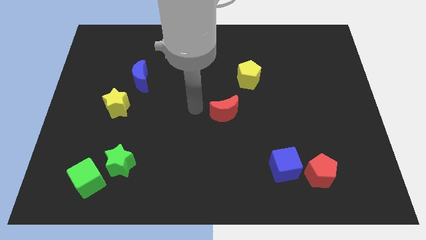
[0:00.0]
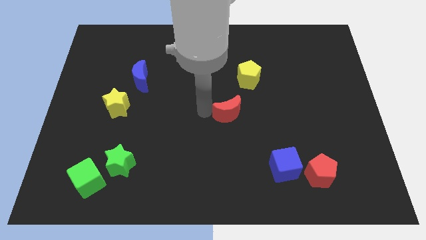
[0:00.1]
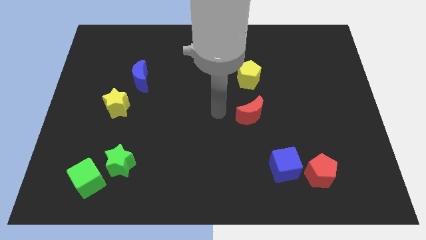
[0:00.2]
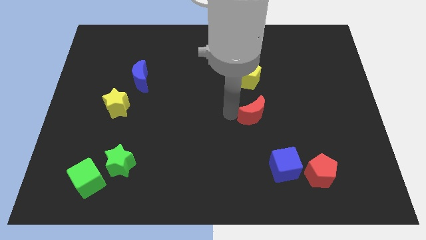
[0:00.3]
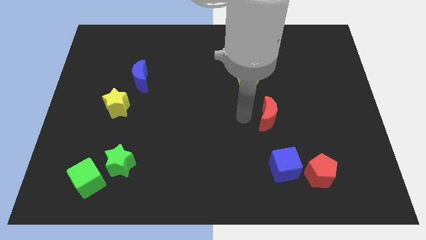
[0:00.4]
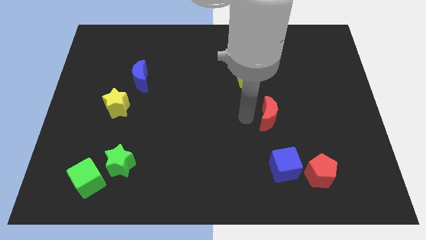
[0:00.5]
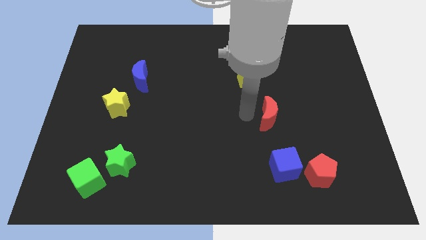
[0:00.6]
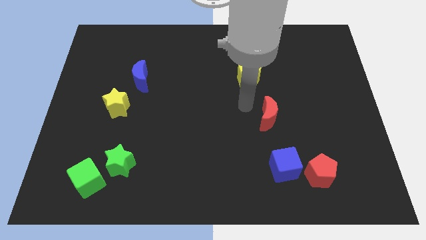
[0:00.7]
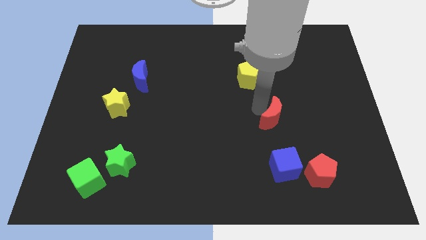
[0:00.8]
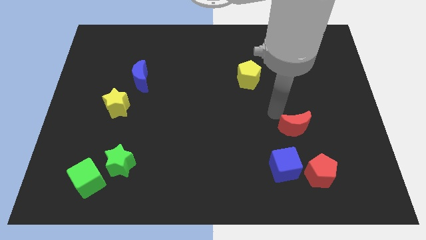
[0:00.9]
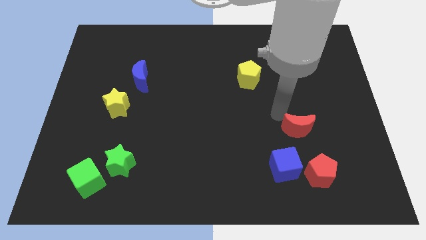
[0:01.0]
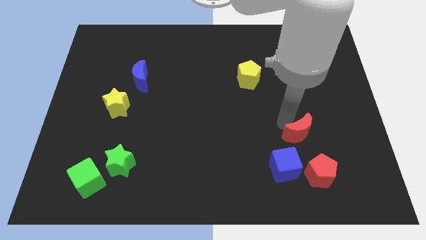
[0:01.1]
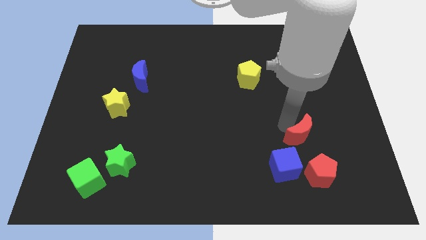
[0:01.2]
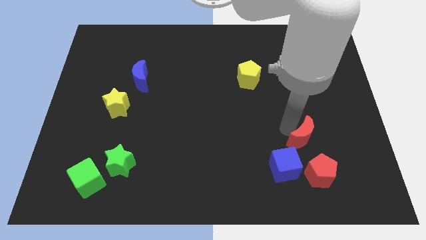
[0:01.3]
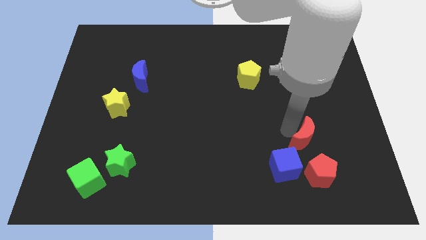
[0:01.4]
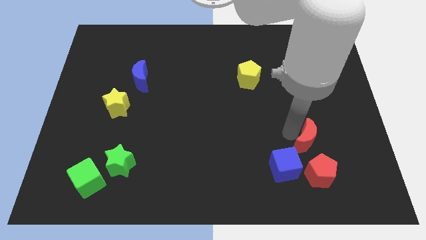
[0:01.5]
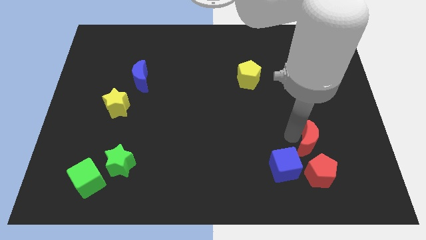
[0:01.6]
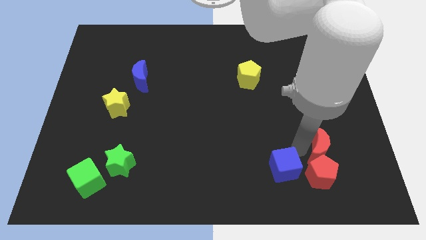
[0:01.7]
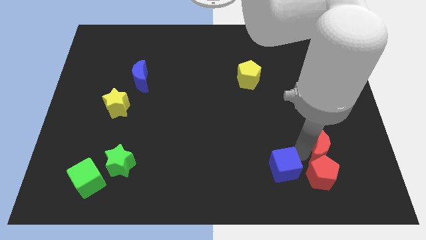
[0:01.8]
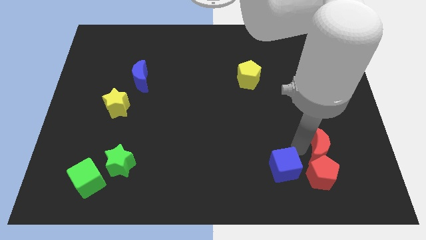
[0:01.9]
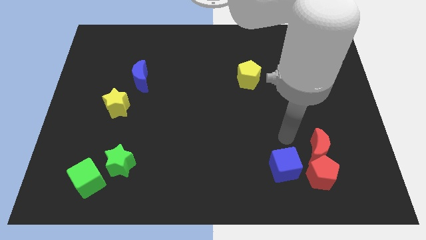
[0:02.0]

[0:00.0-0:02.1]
place the red moon into red pentagon on top

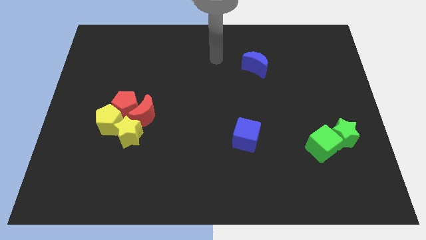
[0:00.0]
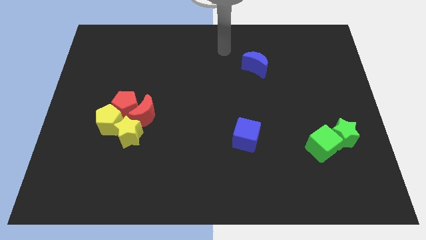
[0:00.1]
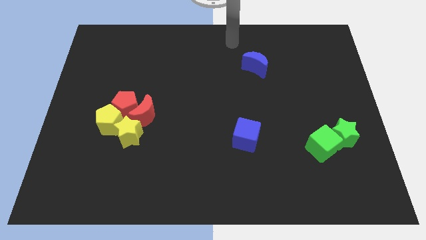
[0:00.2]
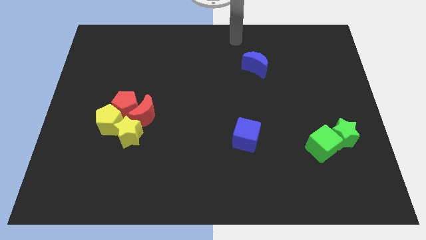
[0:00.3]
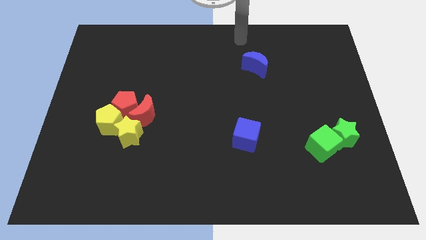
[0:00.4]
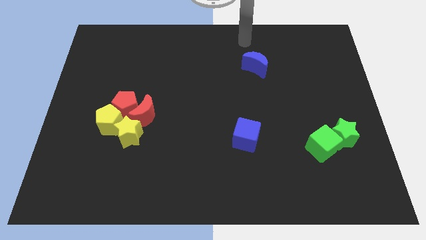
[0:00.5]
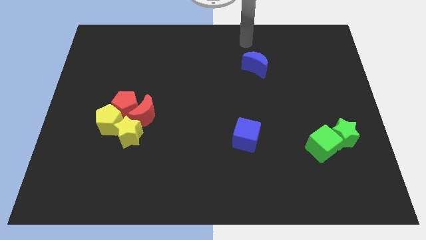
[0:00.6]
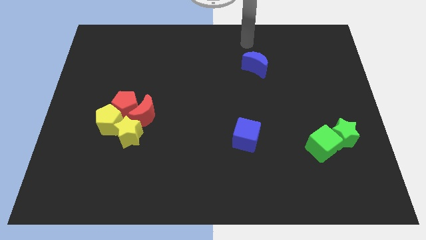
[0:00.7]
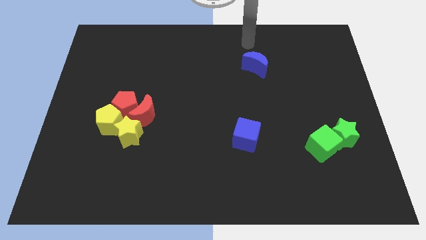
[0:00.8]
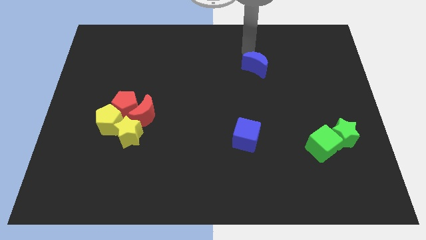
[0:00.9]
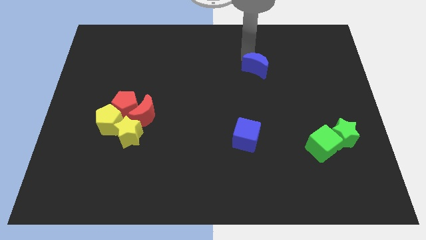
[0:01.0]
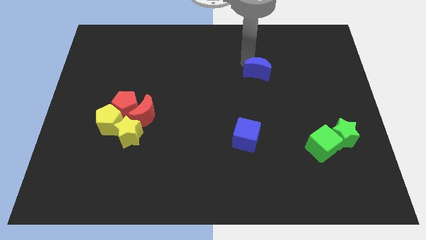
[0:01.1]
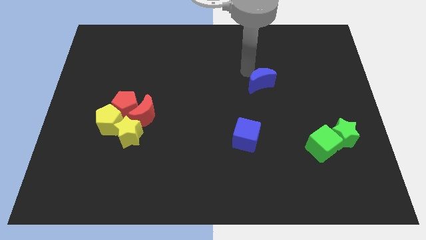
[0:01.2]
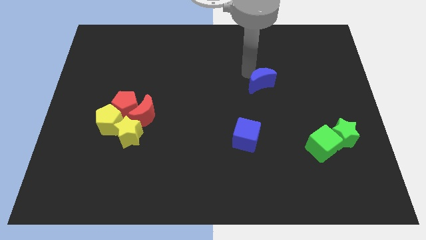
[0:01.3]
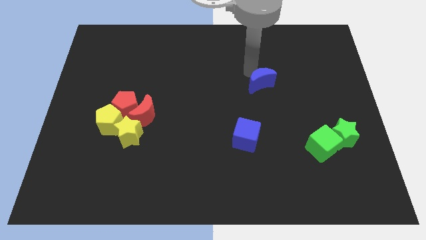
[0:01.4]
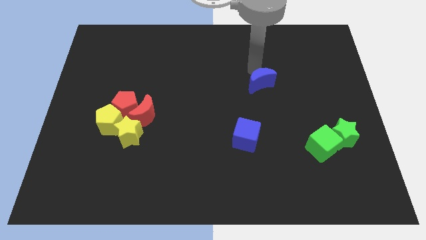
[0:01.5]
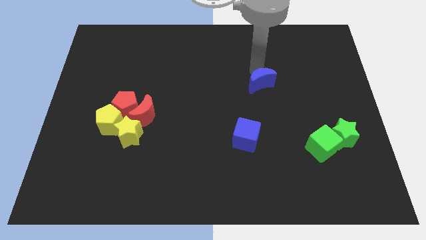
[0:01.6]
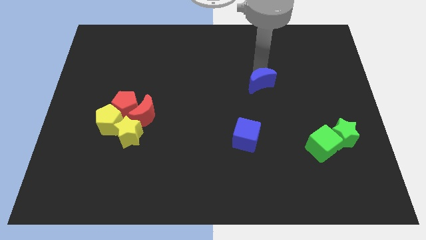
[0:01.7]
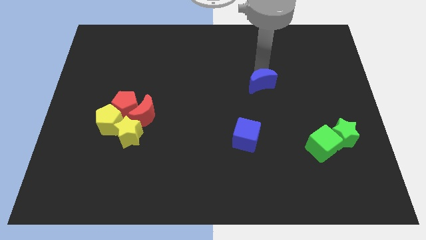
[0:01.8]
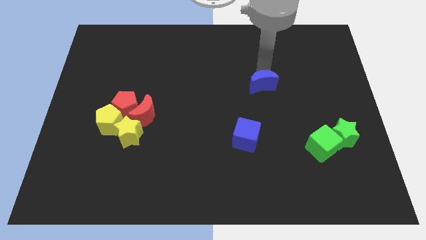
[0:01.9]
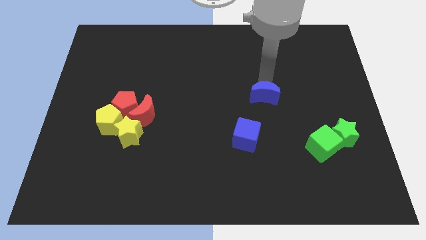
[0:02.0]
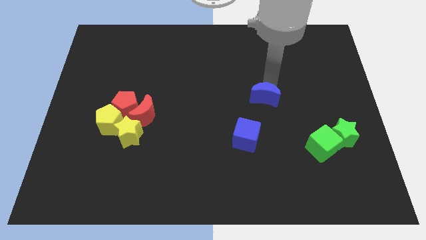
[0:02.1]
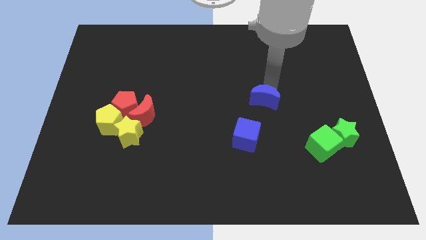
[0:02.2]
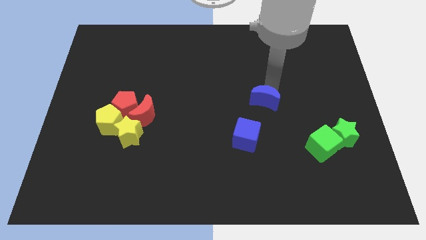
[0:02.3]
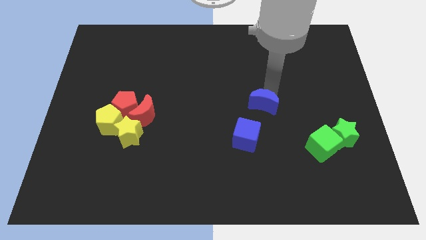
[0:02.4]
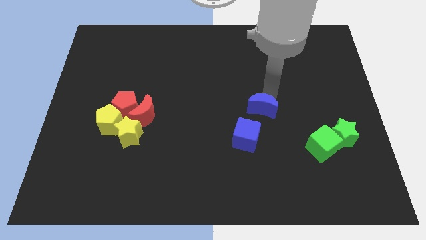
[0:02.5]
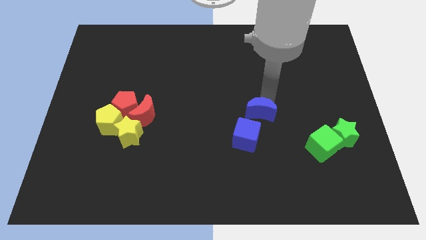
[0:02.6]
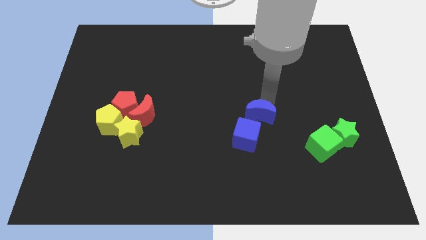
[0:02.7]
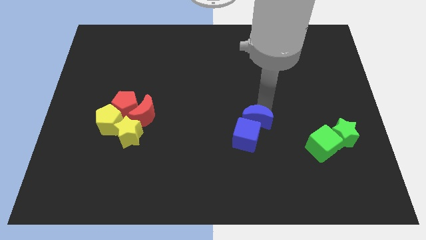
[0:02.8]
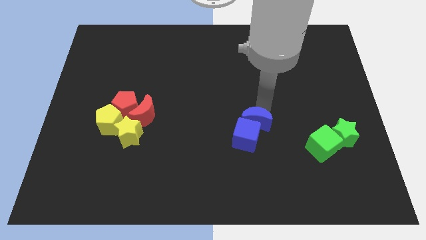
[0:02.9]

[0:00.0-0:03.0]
place the blue moon above the blue cube

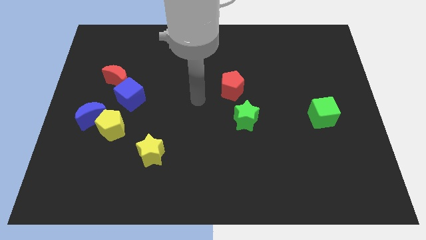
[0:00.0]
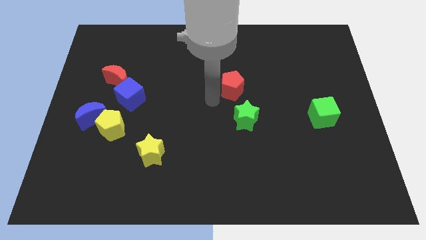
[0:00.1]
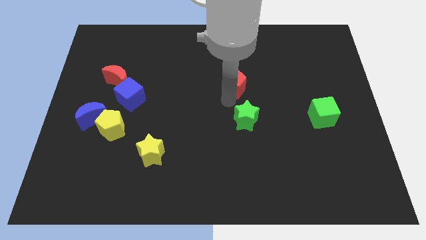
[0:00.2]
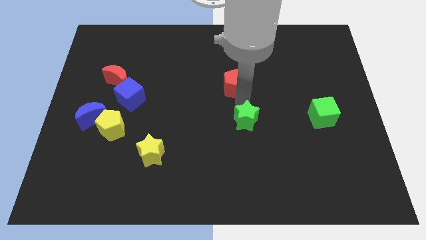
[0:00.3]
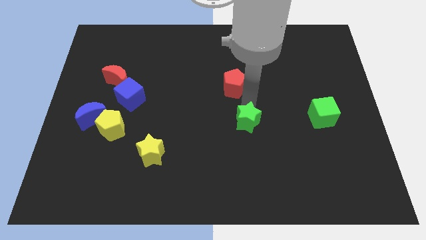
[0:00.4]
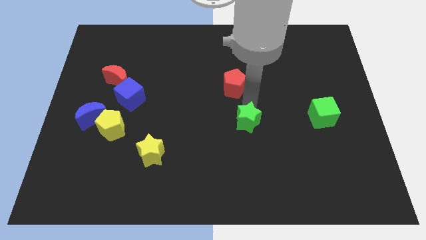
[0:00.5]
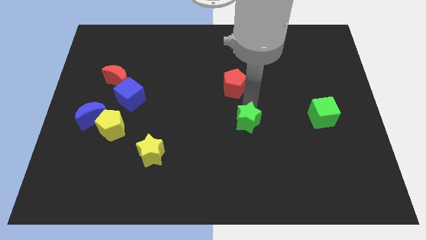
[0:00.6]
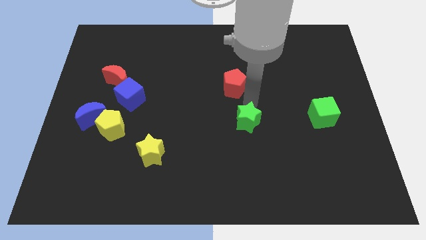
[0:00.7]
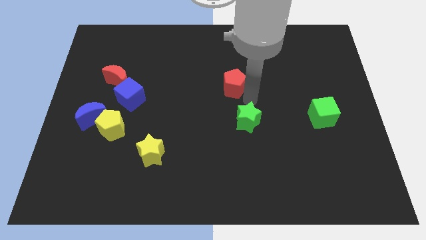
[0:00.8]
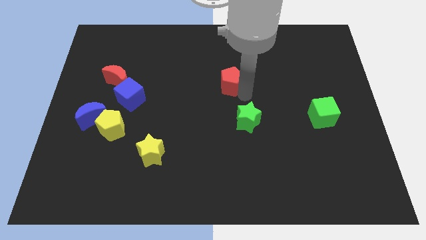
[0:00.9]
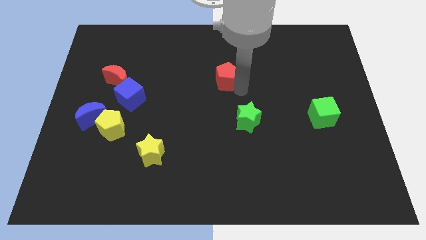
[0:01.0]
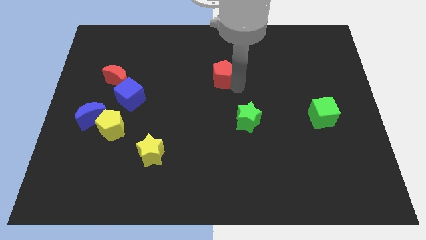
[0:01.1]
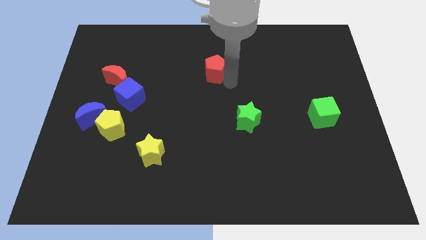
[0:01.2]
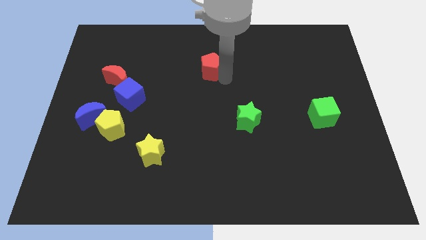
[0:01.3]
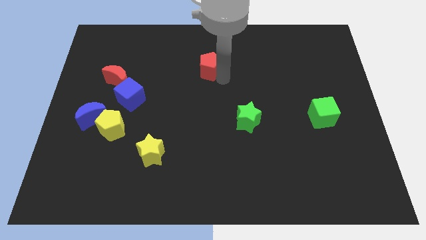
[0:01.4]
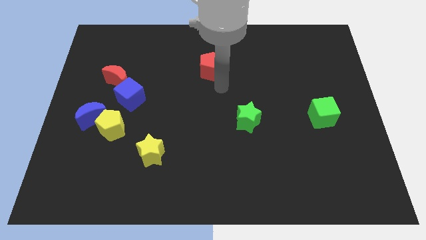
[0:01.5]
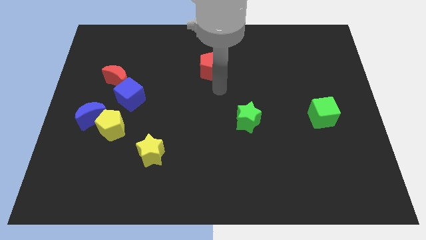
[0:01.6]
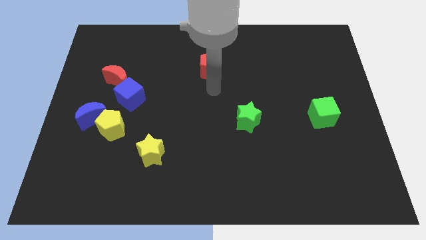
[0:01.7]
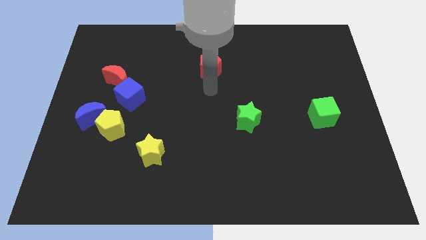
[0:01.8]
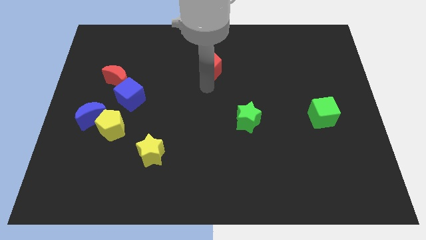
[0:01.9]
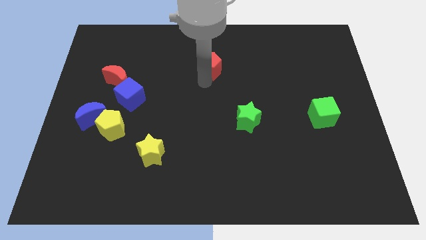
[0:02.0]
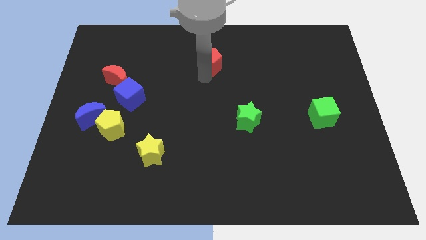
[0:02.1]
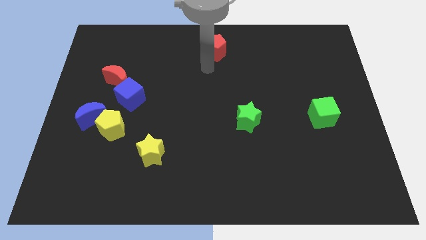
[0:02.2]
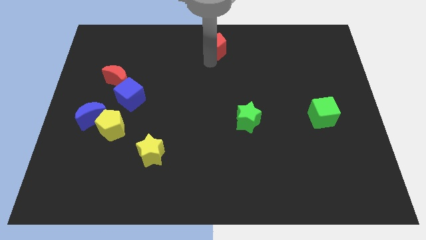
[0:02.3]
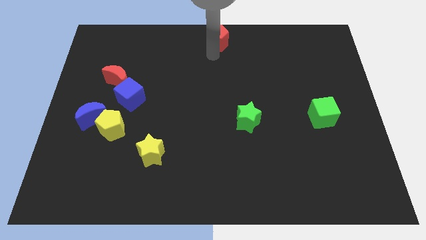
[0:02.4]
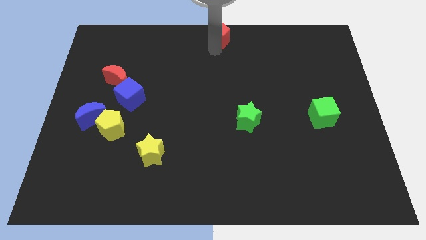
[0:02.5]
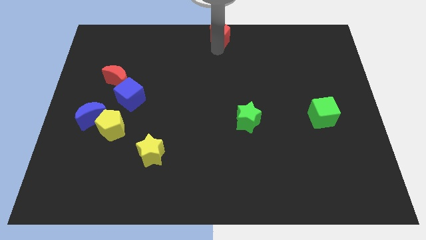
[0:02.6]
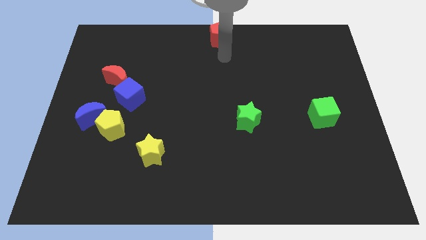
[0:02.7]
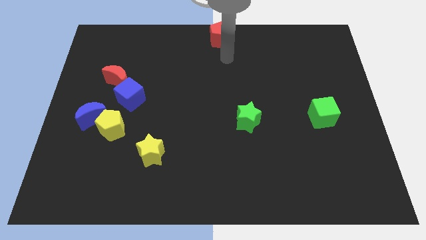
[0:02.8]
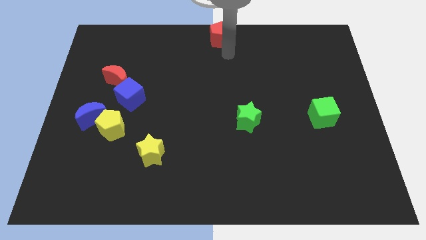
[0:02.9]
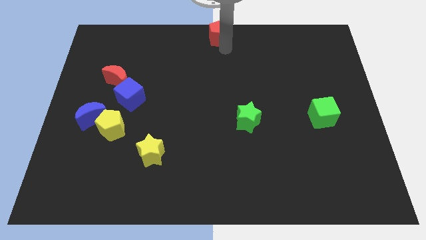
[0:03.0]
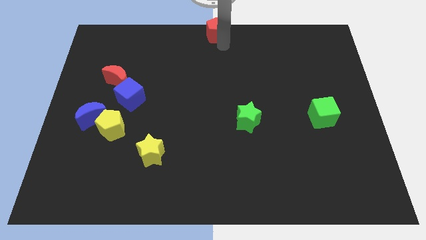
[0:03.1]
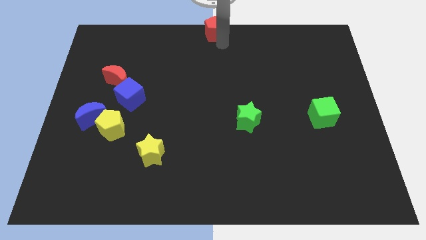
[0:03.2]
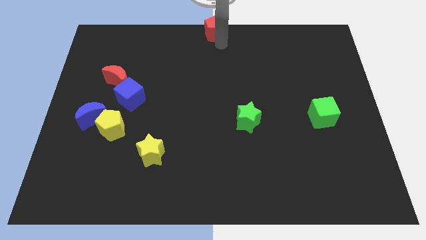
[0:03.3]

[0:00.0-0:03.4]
move the red pentagon to the top center of the board

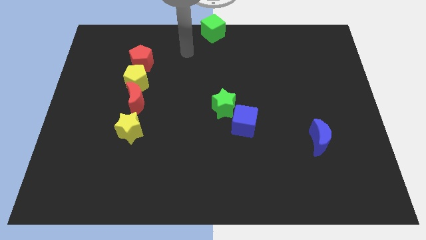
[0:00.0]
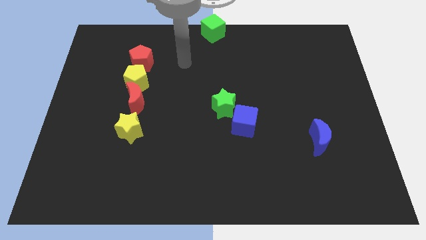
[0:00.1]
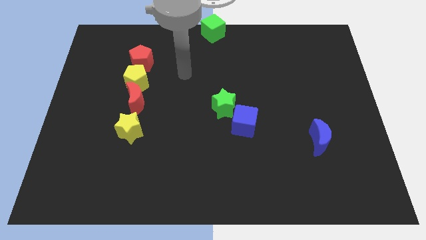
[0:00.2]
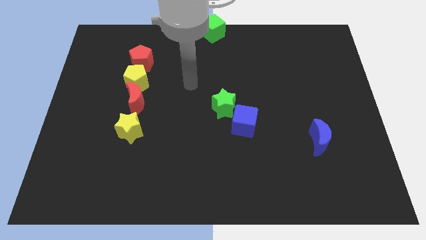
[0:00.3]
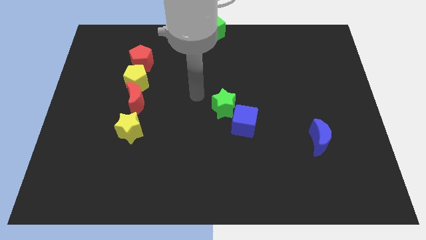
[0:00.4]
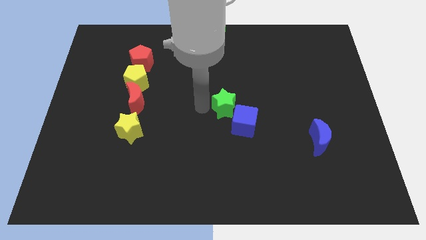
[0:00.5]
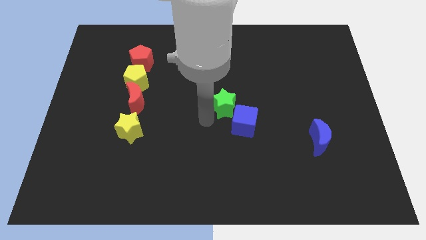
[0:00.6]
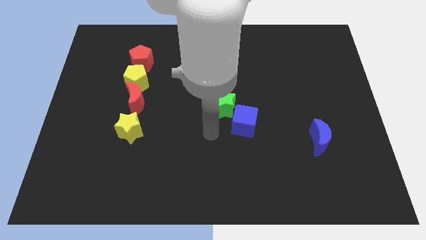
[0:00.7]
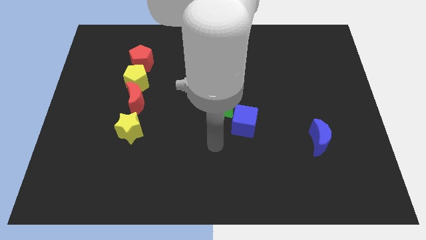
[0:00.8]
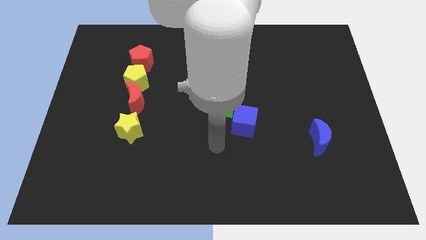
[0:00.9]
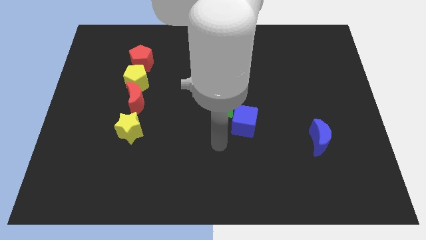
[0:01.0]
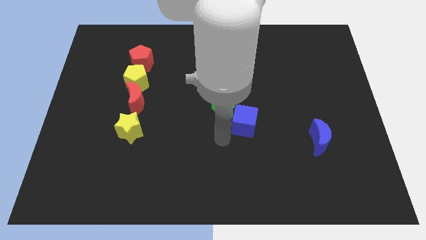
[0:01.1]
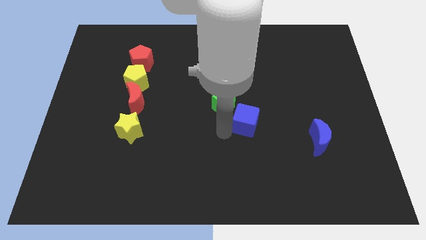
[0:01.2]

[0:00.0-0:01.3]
move your hand close to the blue cube
